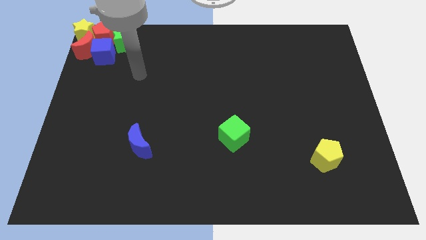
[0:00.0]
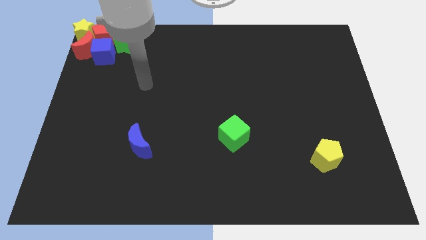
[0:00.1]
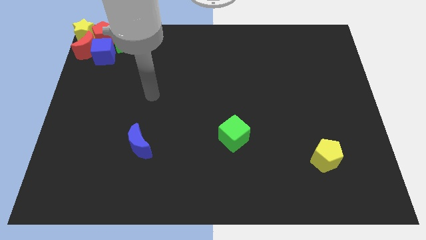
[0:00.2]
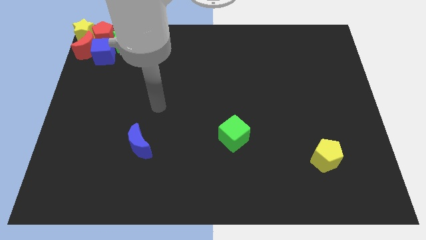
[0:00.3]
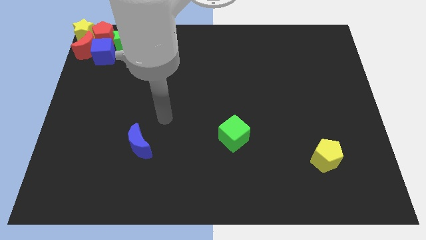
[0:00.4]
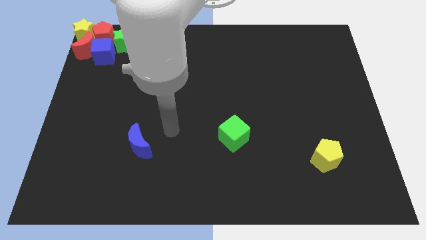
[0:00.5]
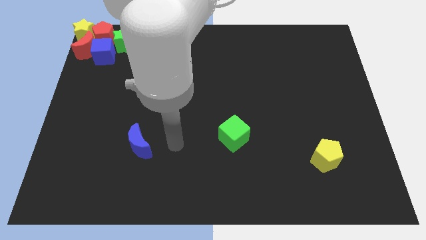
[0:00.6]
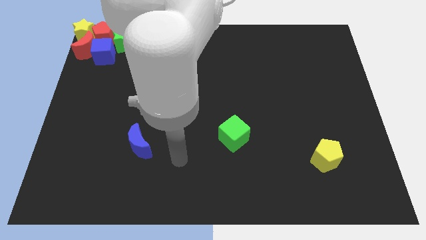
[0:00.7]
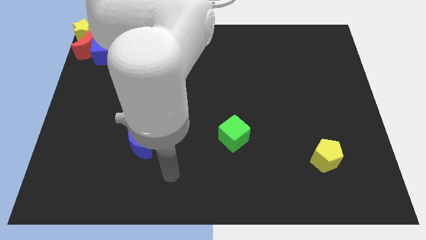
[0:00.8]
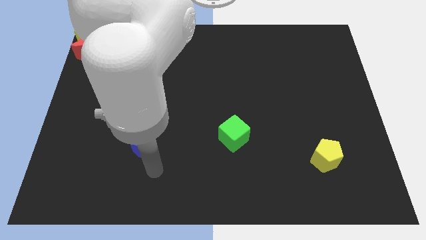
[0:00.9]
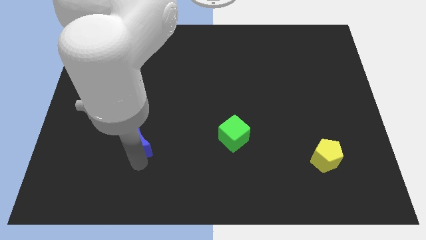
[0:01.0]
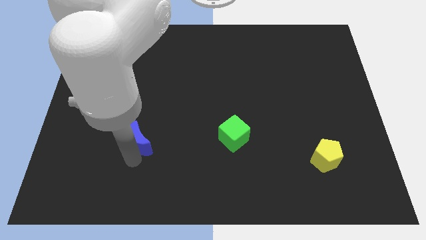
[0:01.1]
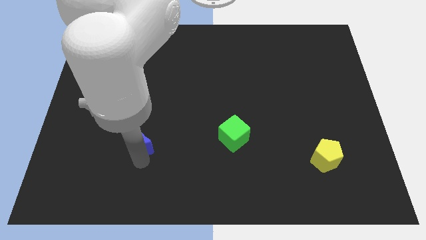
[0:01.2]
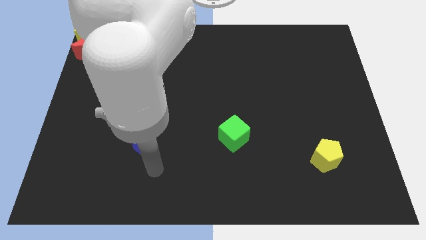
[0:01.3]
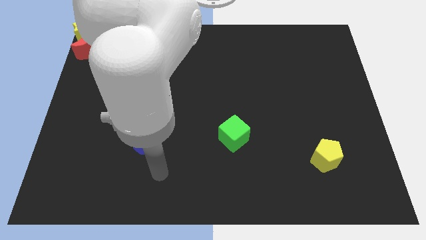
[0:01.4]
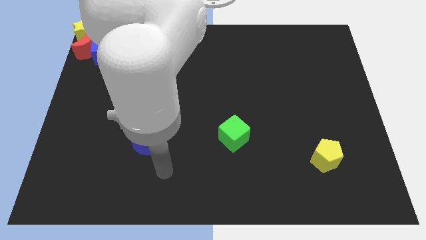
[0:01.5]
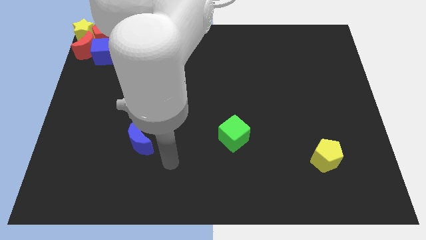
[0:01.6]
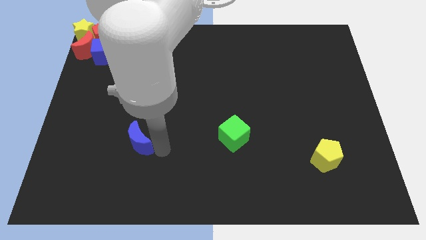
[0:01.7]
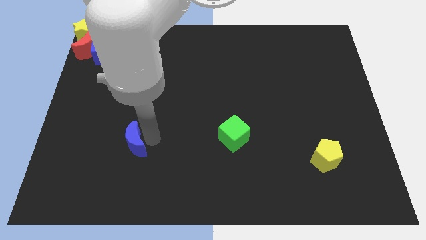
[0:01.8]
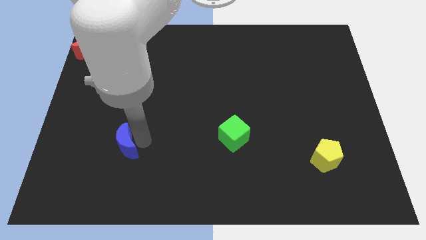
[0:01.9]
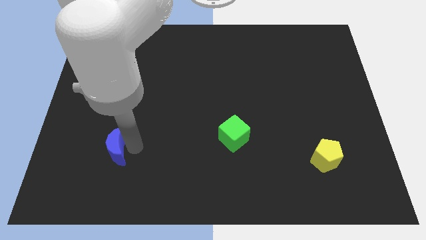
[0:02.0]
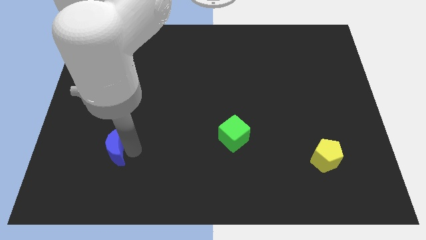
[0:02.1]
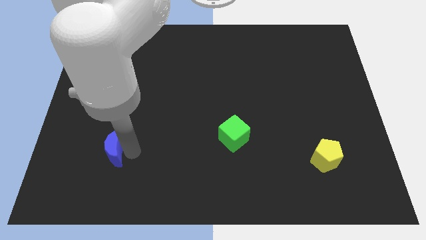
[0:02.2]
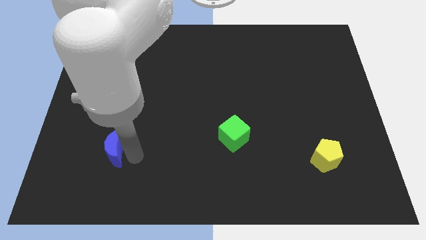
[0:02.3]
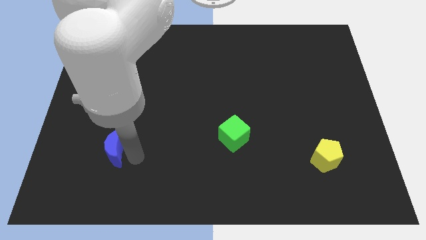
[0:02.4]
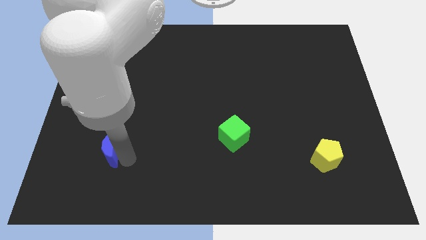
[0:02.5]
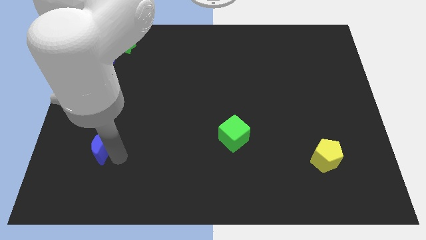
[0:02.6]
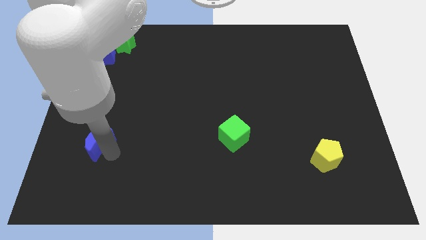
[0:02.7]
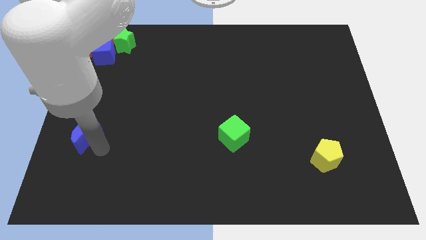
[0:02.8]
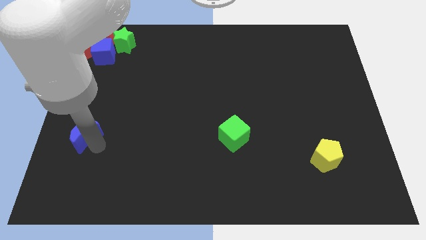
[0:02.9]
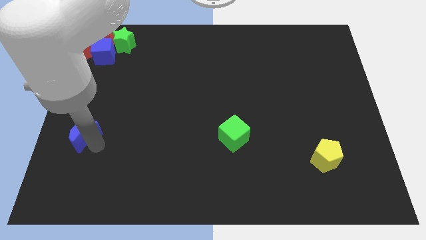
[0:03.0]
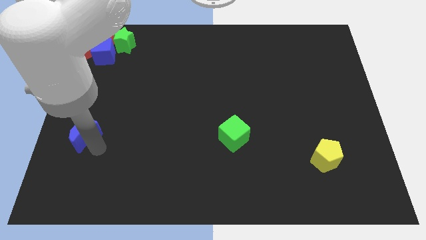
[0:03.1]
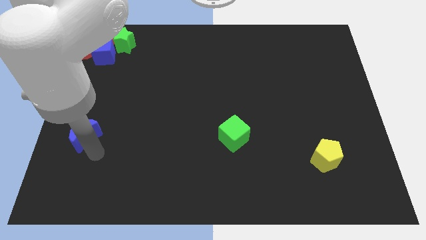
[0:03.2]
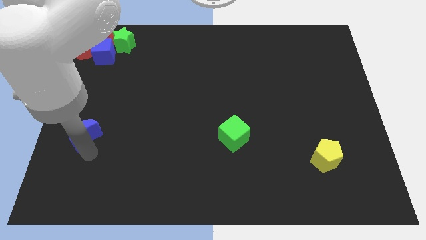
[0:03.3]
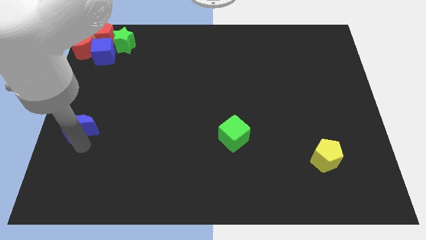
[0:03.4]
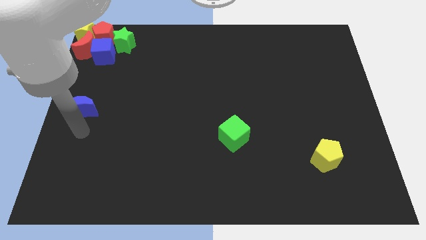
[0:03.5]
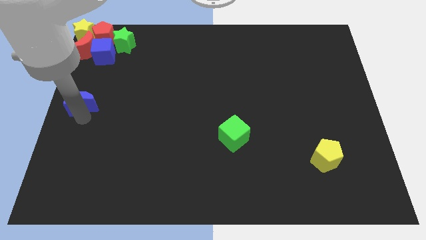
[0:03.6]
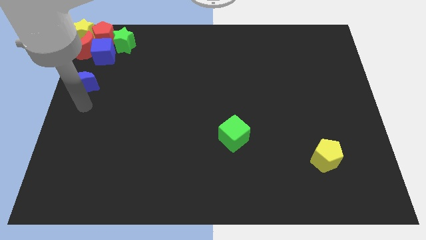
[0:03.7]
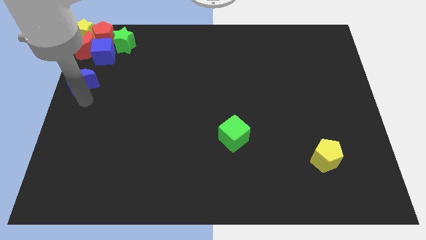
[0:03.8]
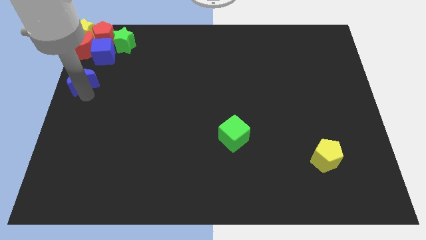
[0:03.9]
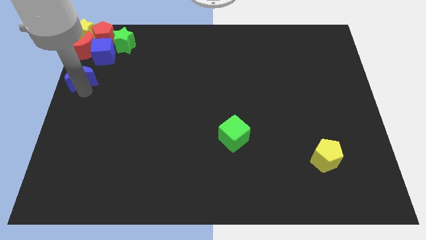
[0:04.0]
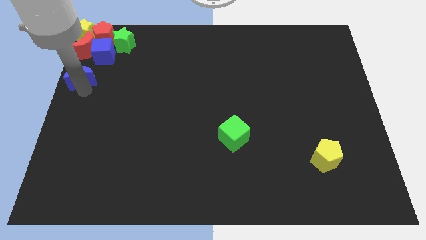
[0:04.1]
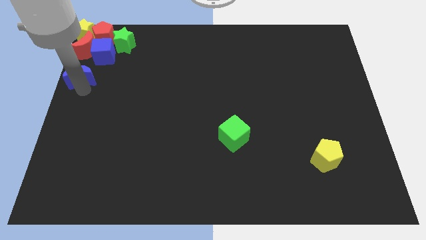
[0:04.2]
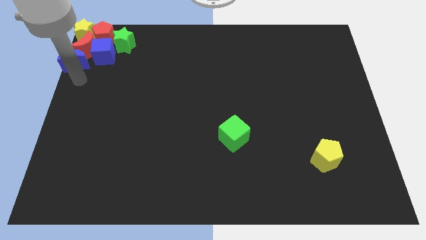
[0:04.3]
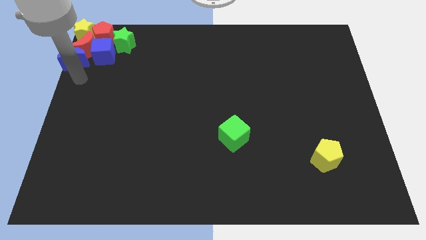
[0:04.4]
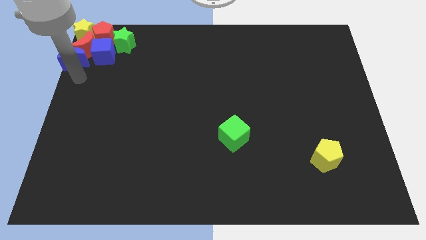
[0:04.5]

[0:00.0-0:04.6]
place the blue moon below the red moon

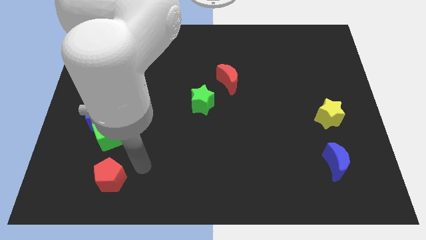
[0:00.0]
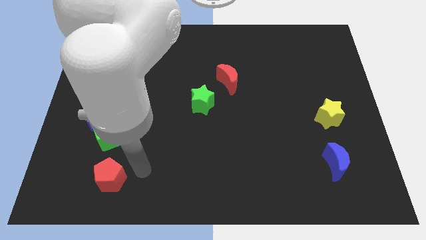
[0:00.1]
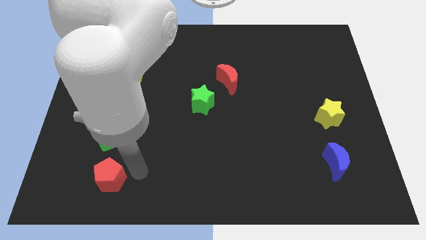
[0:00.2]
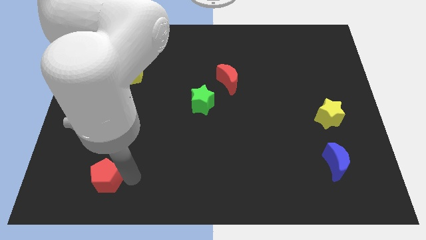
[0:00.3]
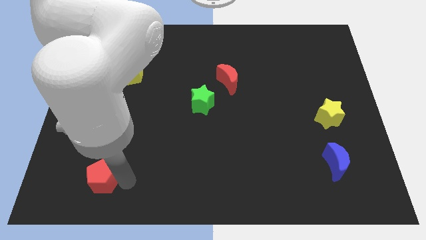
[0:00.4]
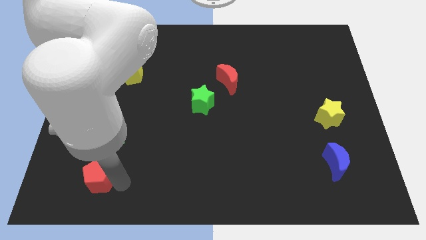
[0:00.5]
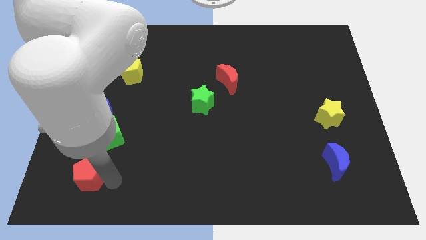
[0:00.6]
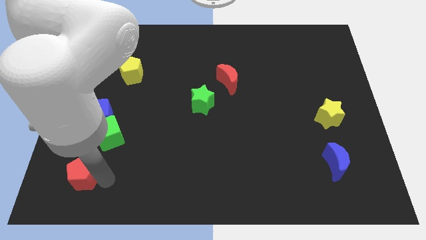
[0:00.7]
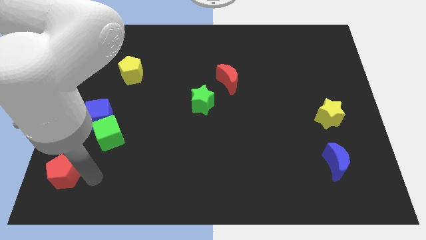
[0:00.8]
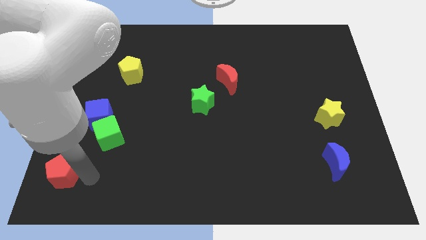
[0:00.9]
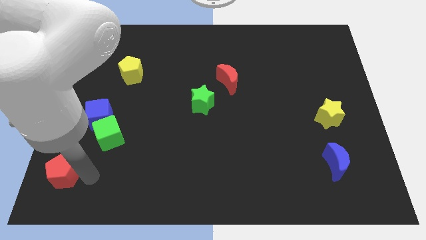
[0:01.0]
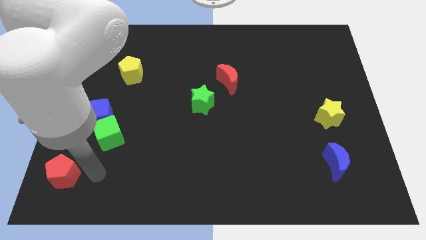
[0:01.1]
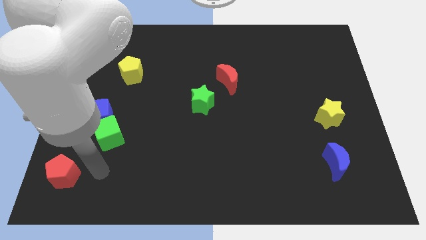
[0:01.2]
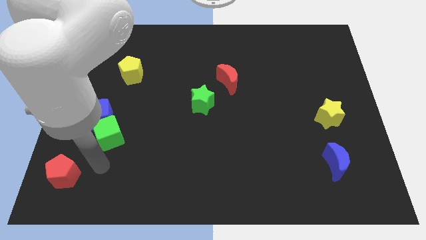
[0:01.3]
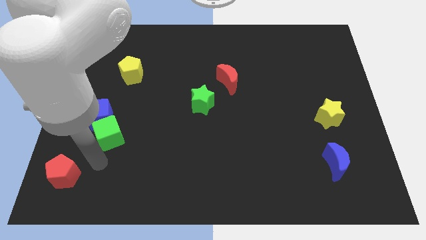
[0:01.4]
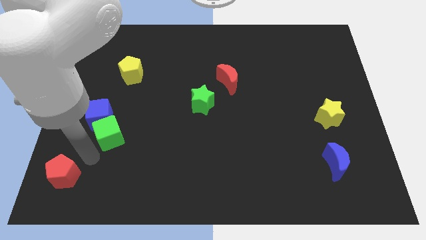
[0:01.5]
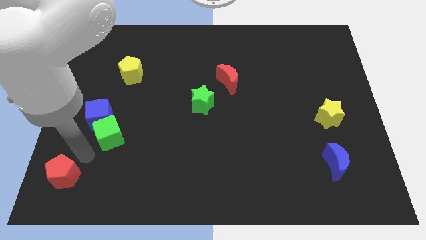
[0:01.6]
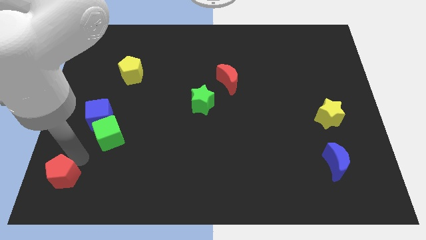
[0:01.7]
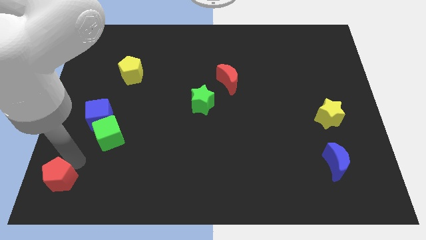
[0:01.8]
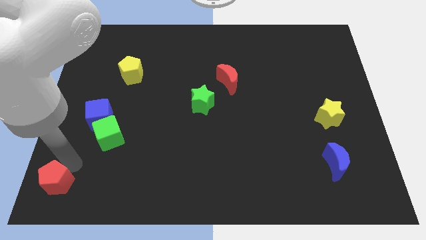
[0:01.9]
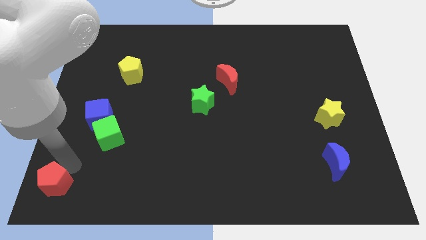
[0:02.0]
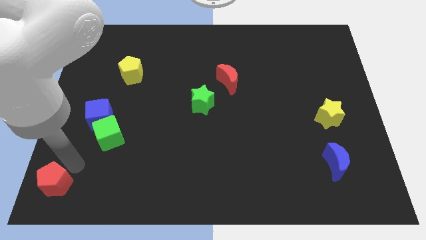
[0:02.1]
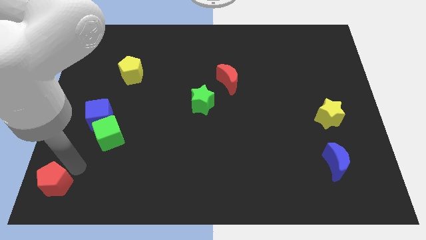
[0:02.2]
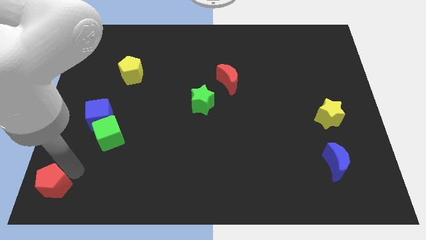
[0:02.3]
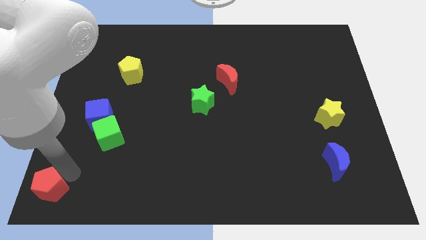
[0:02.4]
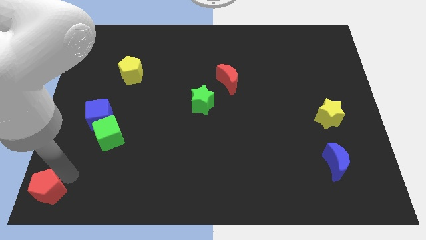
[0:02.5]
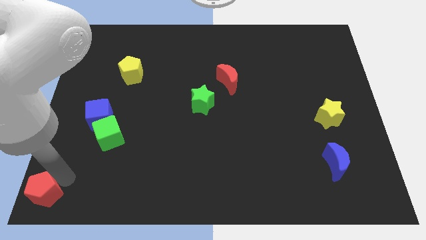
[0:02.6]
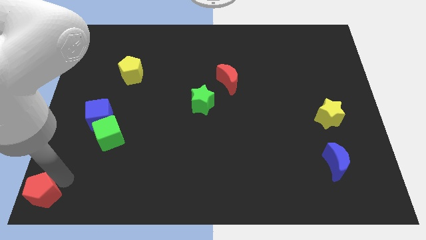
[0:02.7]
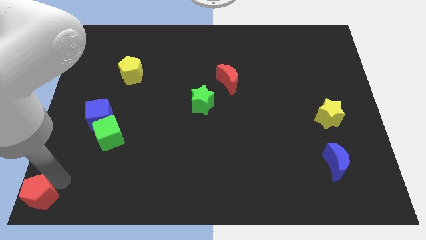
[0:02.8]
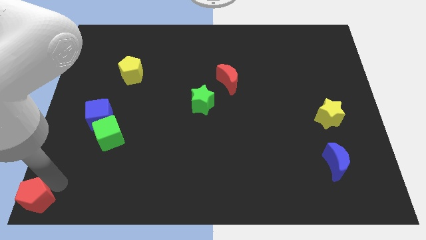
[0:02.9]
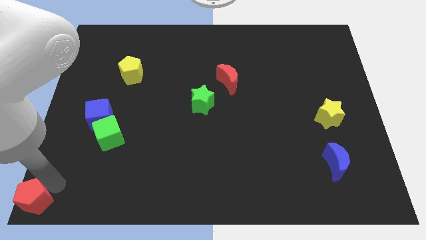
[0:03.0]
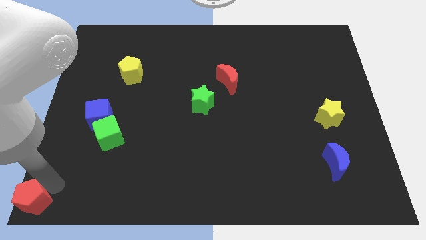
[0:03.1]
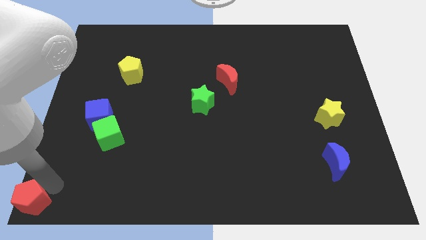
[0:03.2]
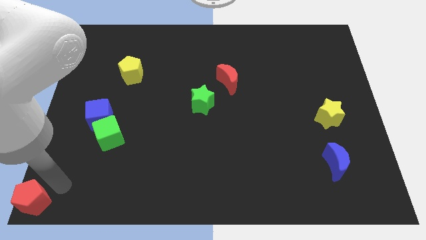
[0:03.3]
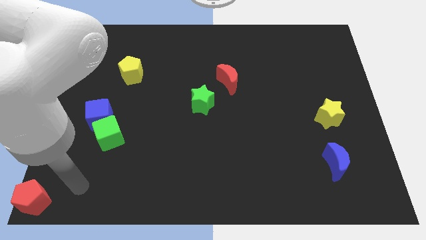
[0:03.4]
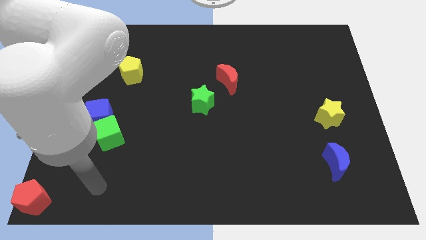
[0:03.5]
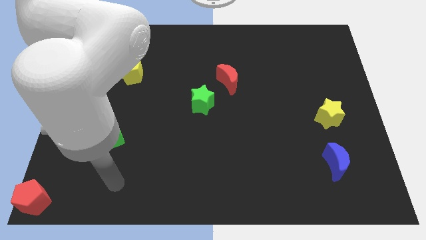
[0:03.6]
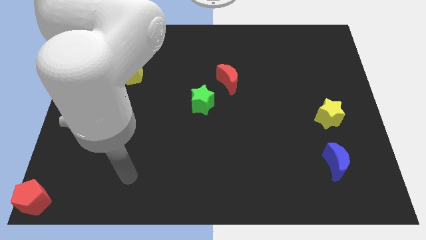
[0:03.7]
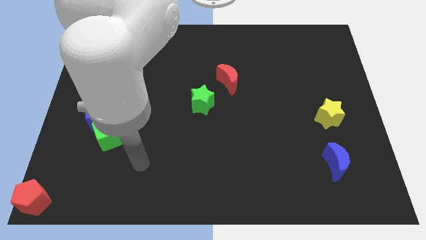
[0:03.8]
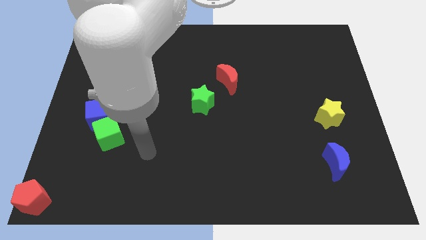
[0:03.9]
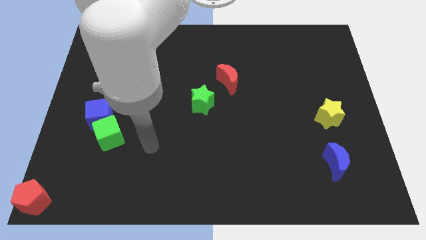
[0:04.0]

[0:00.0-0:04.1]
push the red pentagon to the bottom left

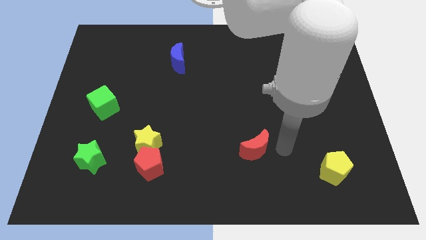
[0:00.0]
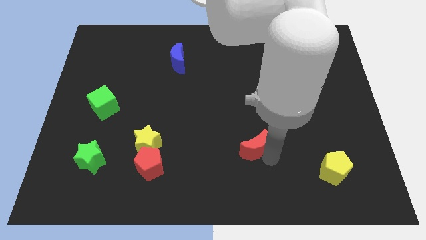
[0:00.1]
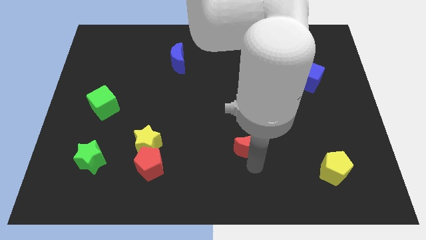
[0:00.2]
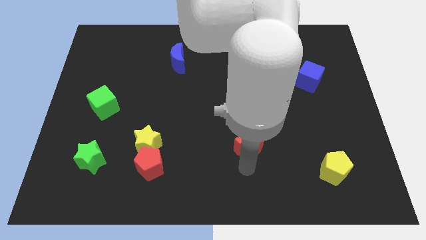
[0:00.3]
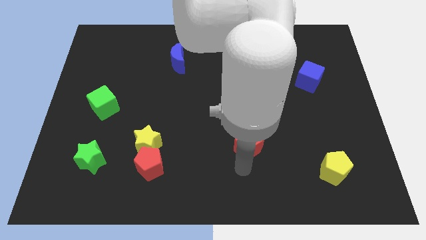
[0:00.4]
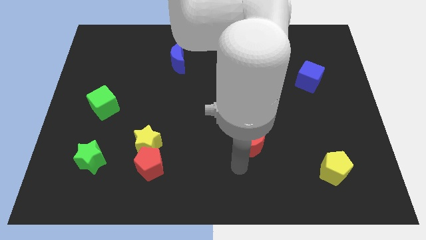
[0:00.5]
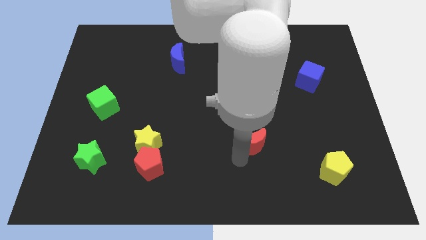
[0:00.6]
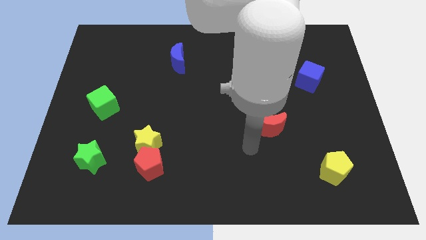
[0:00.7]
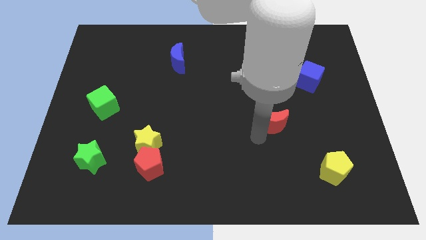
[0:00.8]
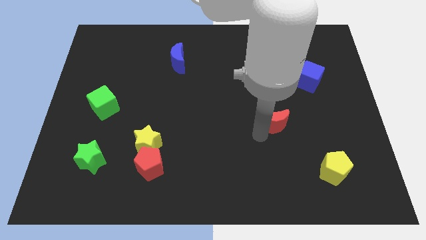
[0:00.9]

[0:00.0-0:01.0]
move red crescent diagonally up
